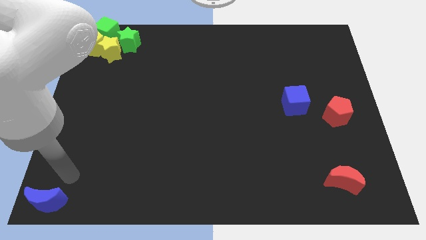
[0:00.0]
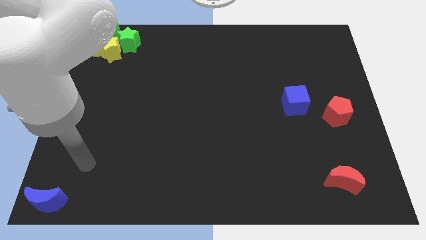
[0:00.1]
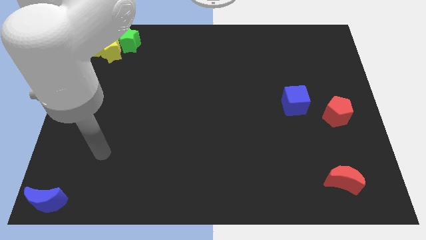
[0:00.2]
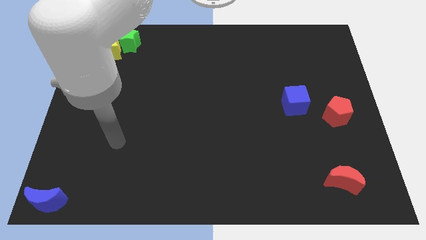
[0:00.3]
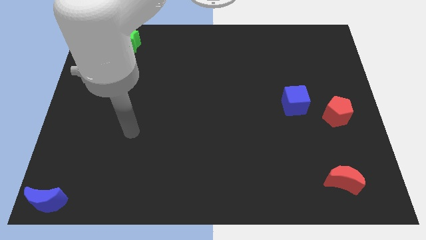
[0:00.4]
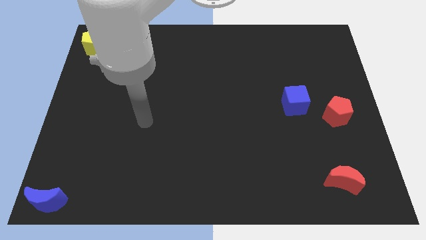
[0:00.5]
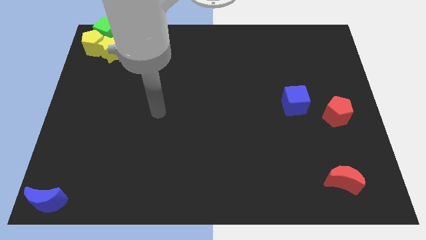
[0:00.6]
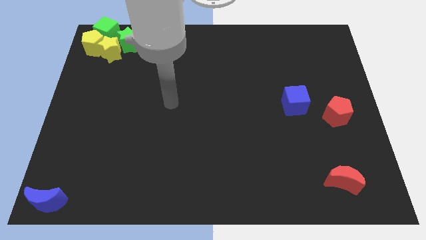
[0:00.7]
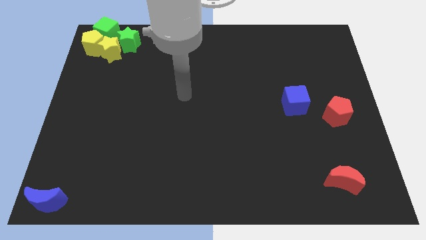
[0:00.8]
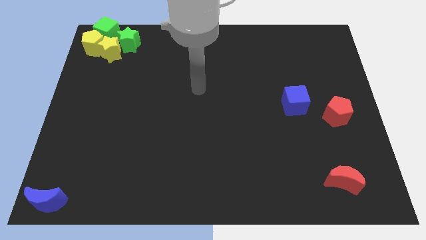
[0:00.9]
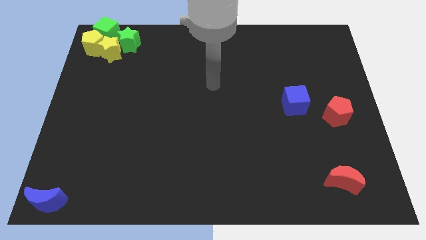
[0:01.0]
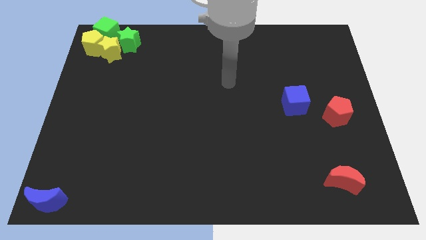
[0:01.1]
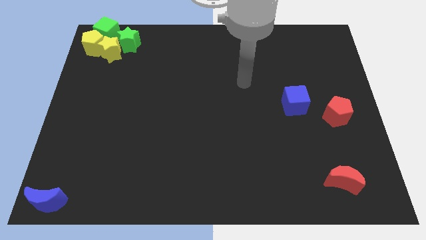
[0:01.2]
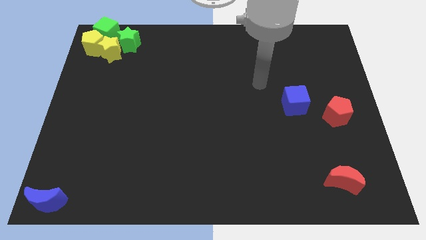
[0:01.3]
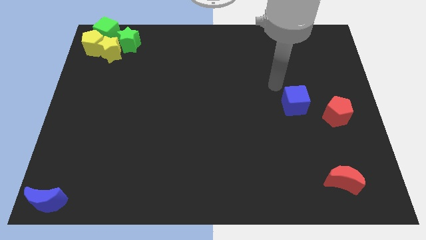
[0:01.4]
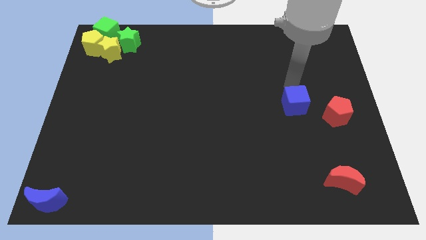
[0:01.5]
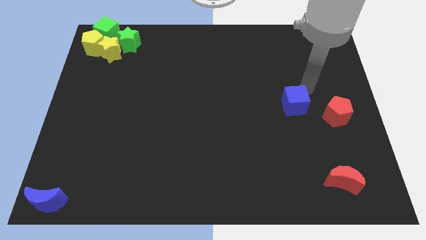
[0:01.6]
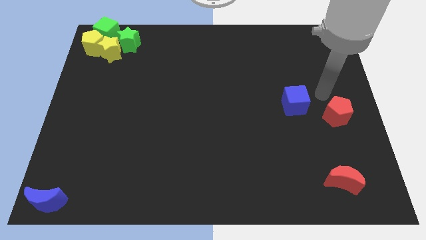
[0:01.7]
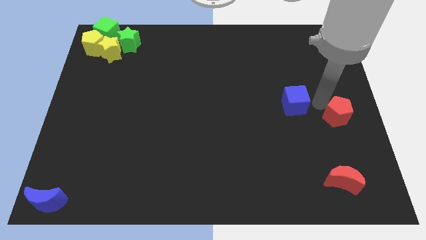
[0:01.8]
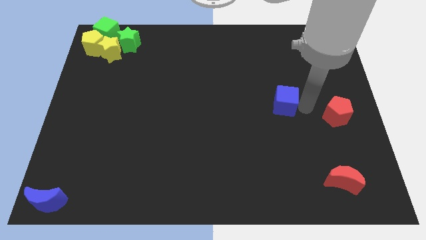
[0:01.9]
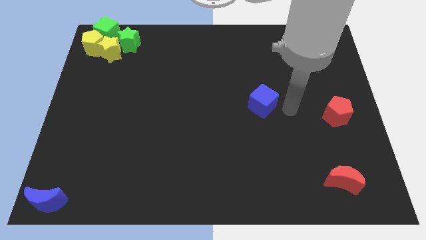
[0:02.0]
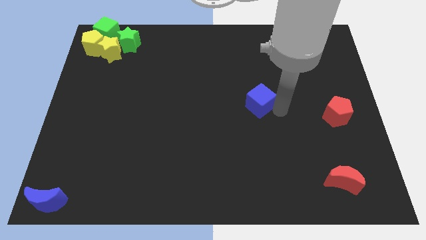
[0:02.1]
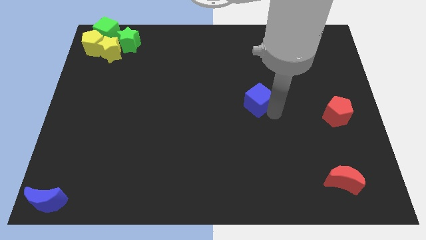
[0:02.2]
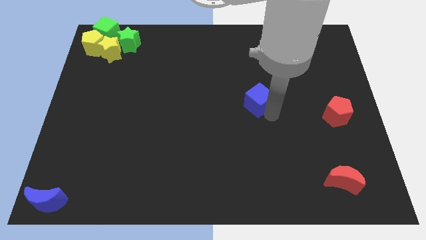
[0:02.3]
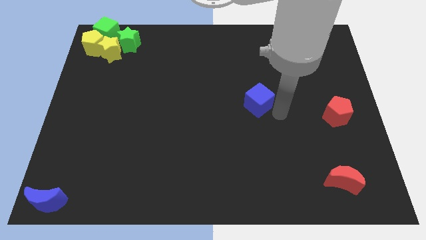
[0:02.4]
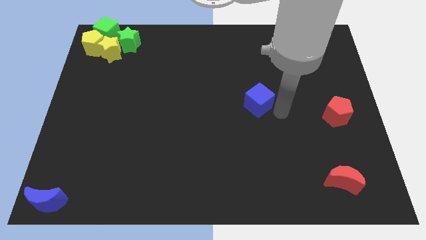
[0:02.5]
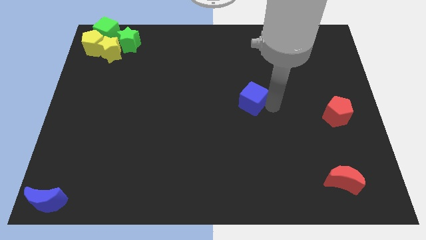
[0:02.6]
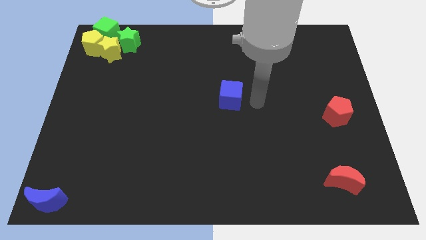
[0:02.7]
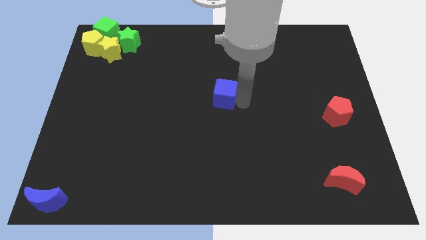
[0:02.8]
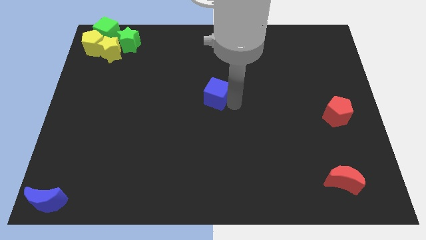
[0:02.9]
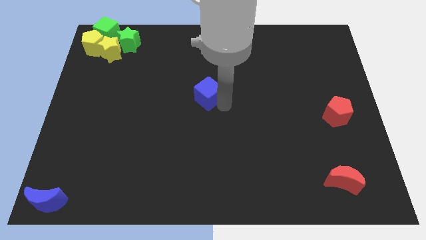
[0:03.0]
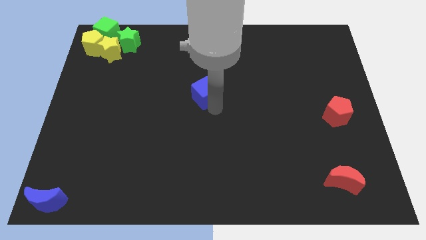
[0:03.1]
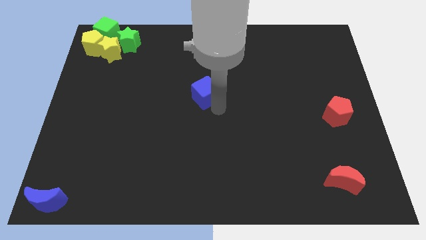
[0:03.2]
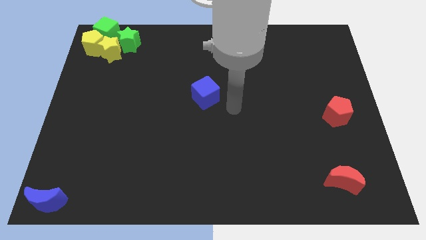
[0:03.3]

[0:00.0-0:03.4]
place the blue cube diagonal to the group of blocks

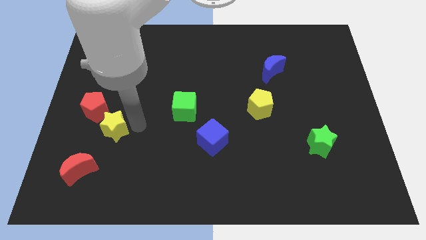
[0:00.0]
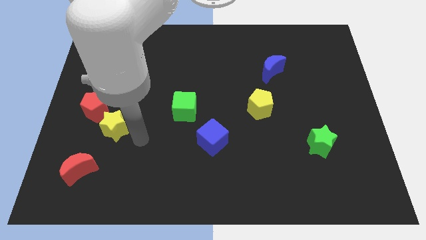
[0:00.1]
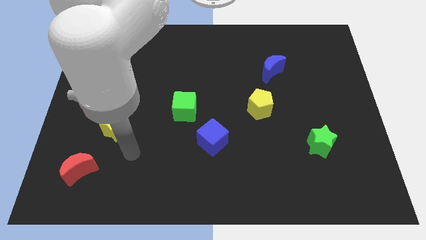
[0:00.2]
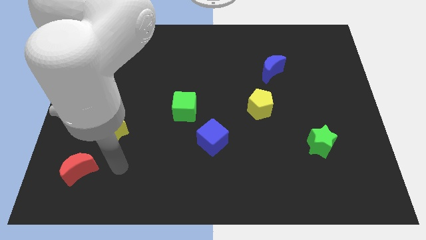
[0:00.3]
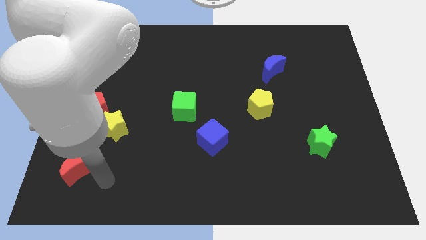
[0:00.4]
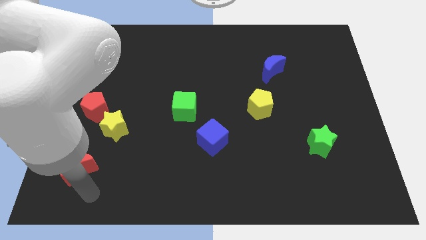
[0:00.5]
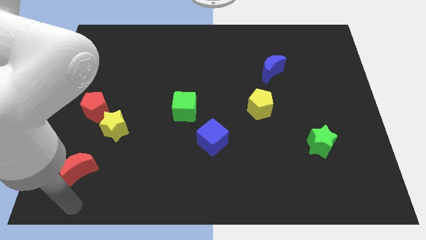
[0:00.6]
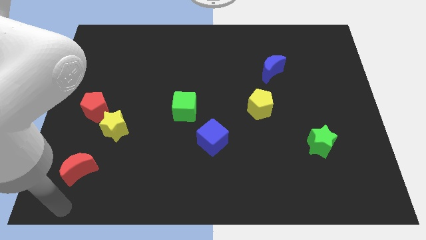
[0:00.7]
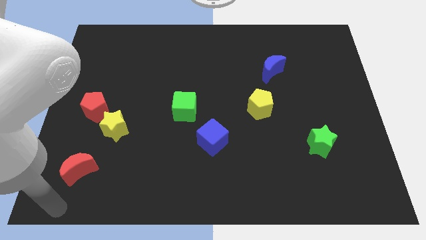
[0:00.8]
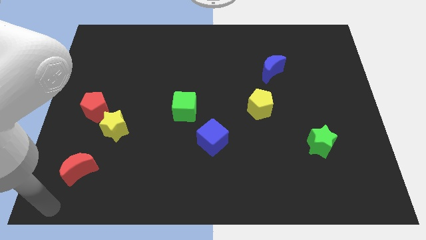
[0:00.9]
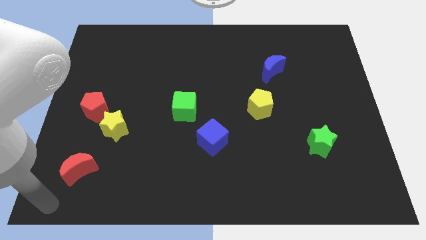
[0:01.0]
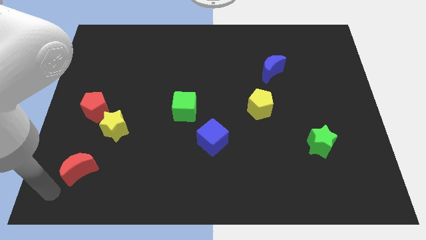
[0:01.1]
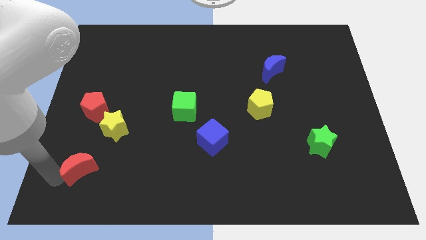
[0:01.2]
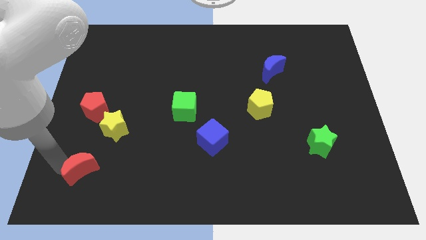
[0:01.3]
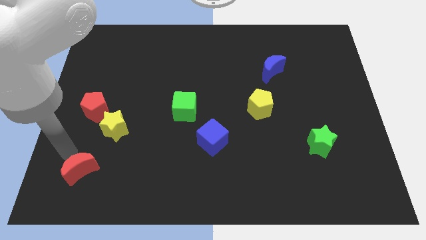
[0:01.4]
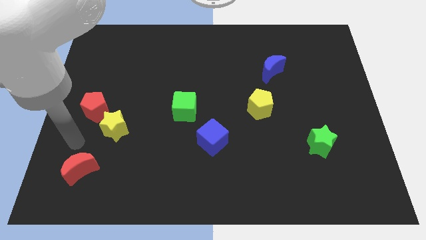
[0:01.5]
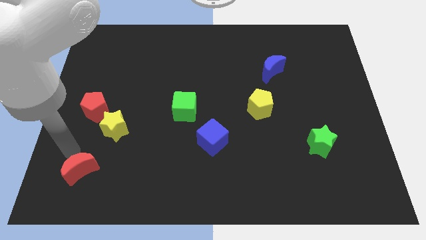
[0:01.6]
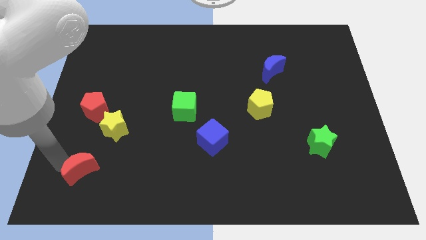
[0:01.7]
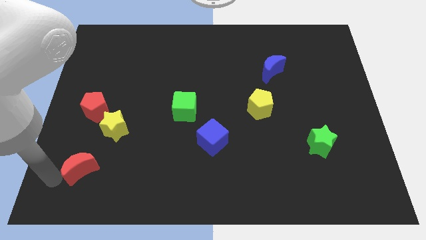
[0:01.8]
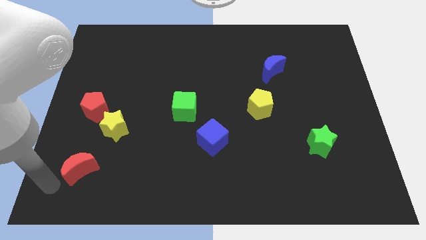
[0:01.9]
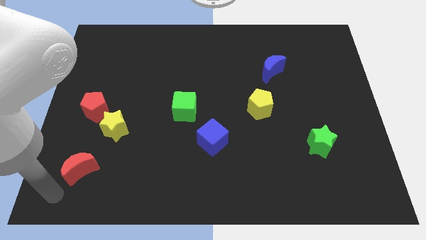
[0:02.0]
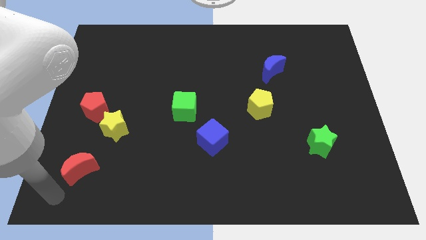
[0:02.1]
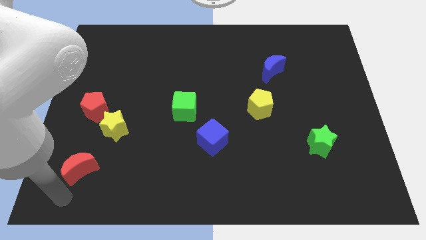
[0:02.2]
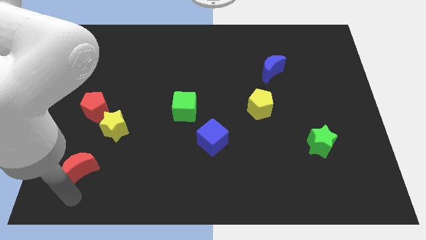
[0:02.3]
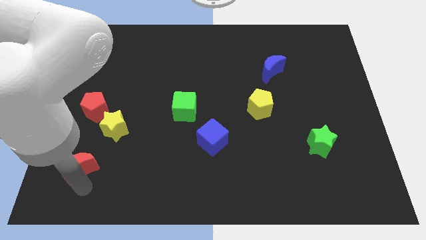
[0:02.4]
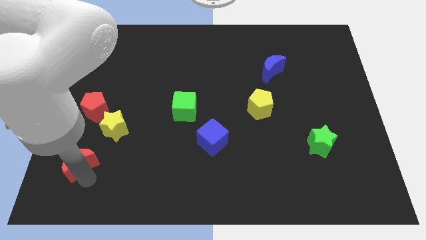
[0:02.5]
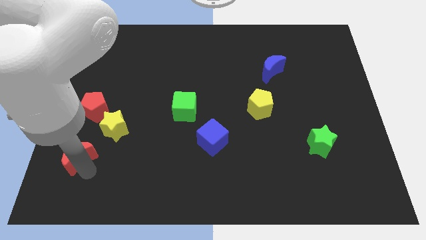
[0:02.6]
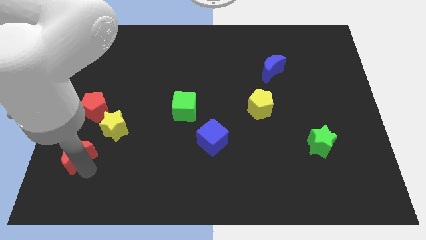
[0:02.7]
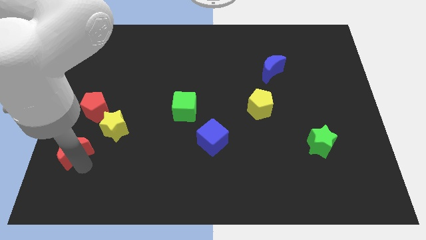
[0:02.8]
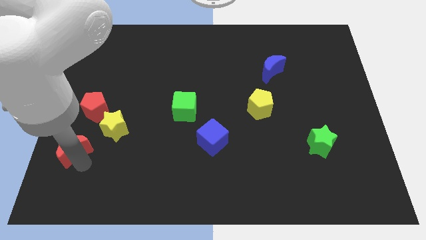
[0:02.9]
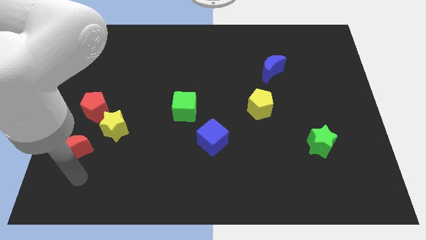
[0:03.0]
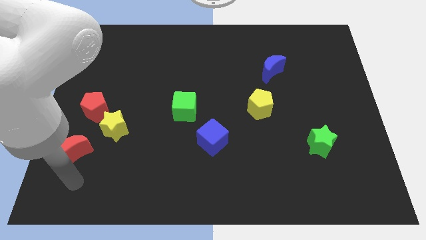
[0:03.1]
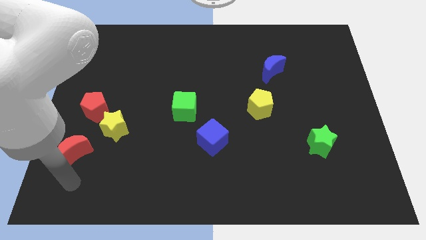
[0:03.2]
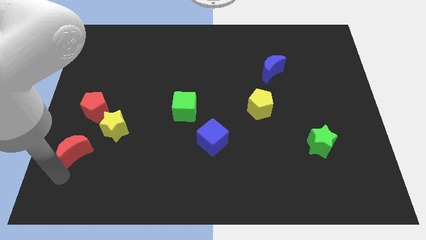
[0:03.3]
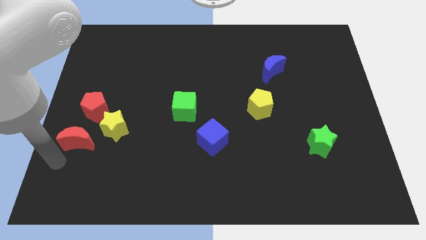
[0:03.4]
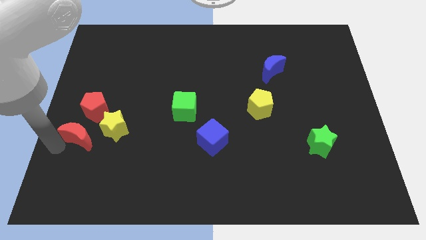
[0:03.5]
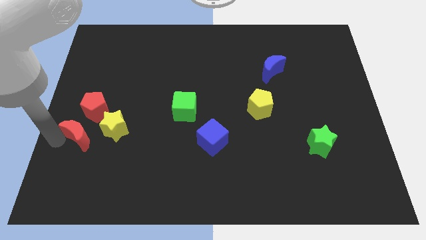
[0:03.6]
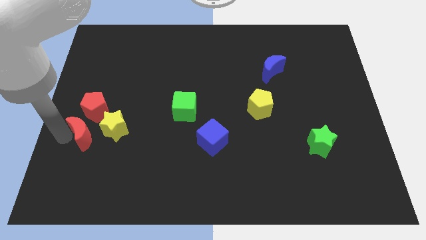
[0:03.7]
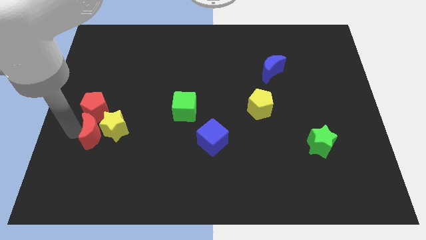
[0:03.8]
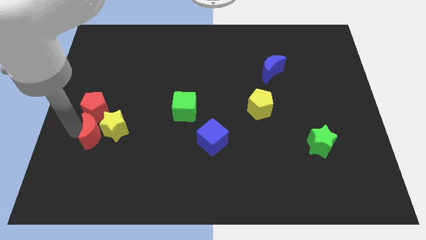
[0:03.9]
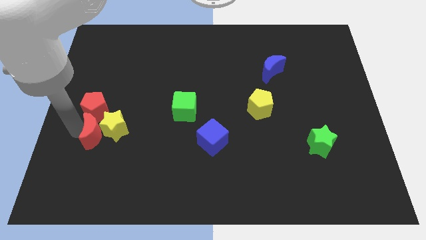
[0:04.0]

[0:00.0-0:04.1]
put the red crescent parallel left to the yellow star

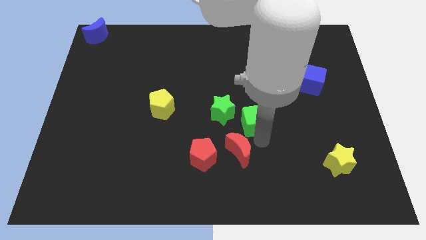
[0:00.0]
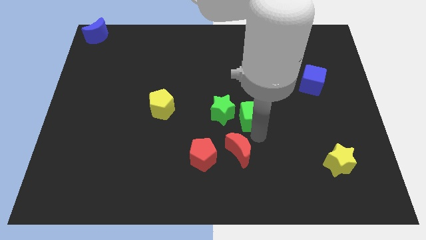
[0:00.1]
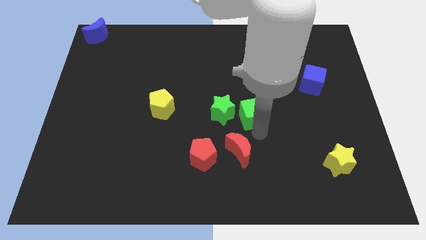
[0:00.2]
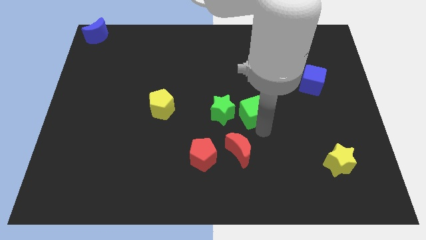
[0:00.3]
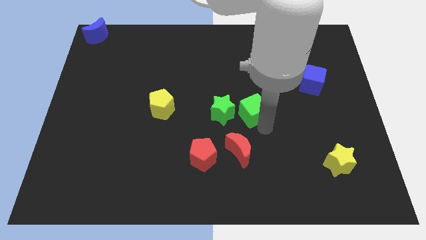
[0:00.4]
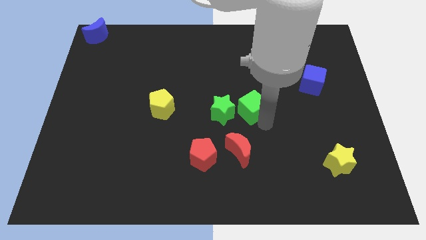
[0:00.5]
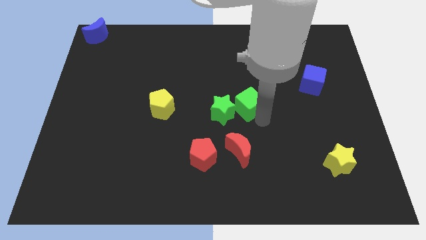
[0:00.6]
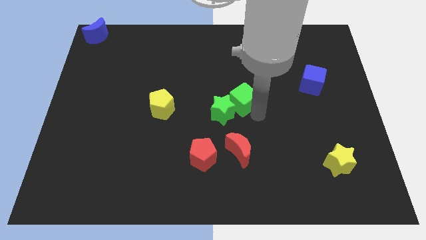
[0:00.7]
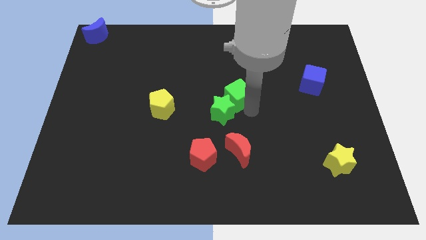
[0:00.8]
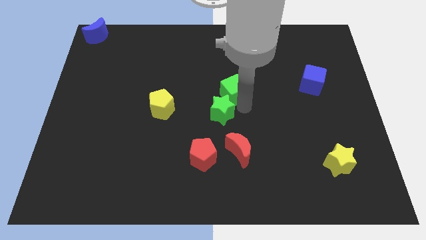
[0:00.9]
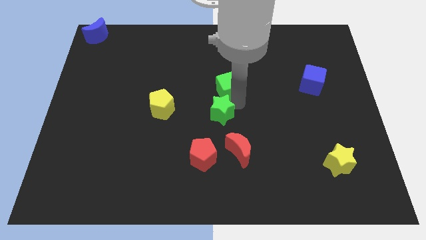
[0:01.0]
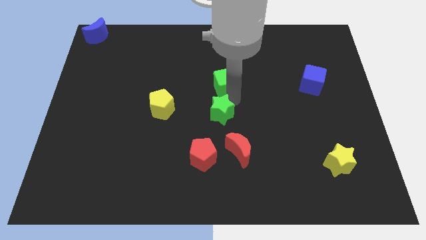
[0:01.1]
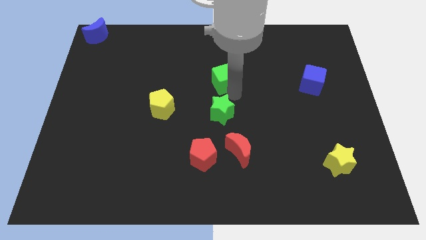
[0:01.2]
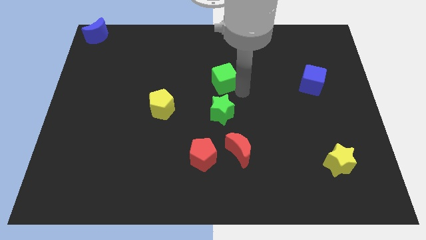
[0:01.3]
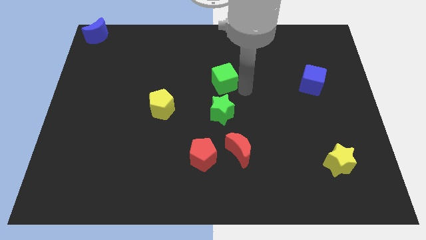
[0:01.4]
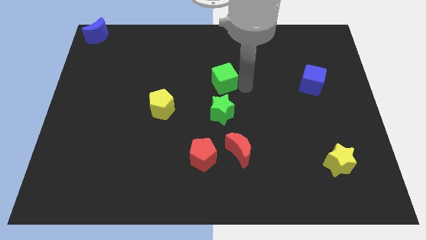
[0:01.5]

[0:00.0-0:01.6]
push the green cube towards the top of green star
